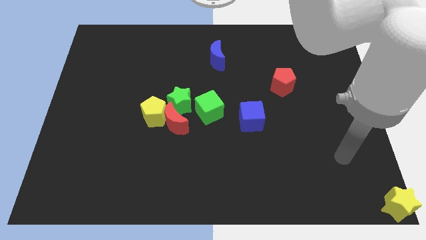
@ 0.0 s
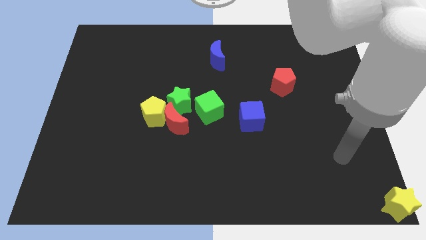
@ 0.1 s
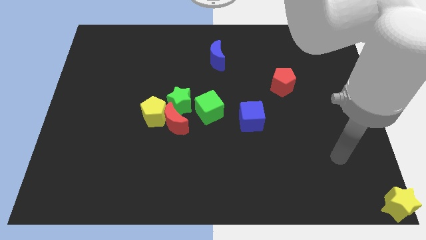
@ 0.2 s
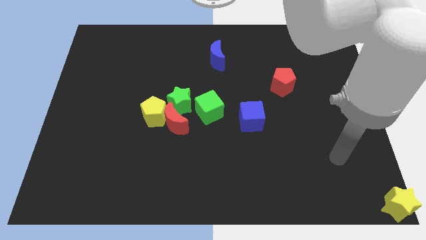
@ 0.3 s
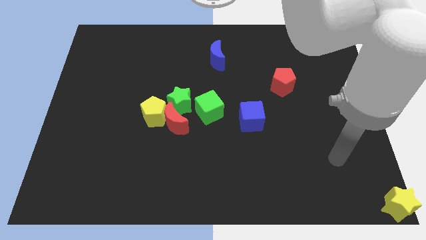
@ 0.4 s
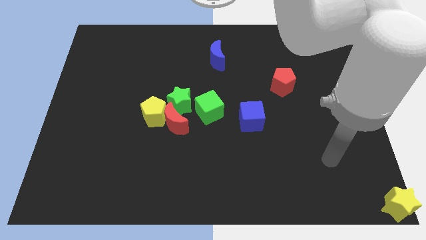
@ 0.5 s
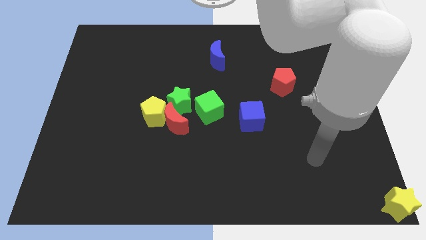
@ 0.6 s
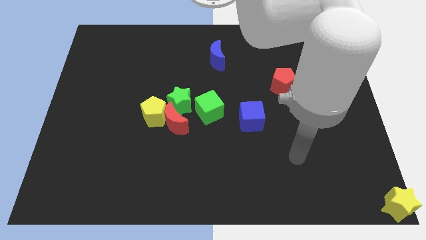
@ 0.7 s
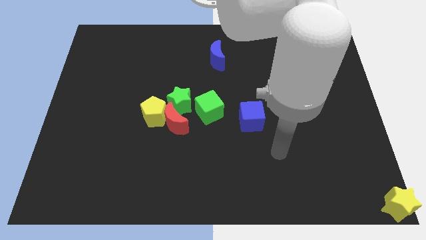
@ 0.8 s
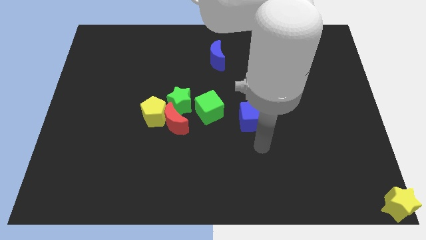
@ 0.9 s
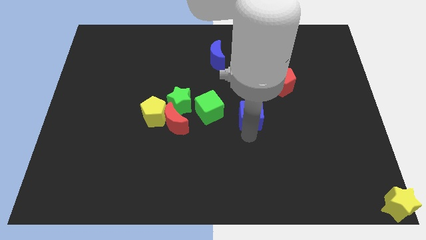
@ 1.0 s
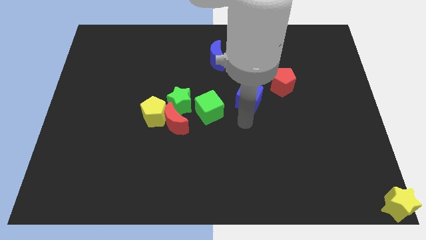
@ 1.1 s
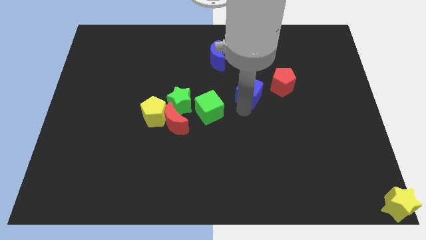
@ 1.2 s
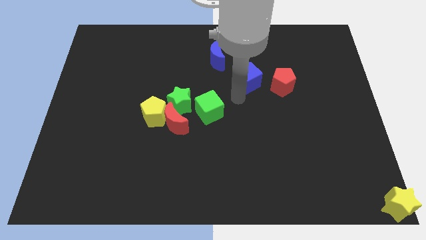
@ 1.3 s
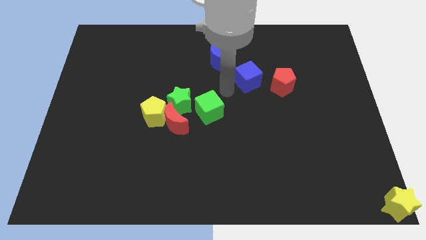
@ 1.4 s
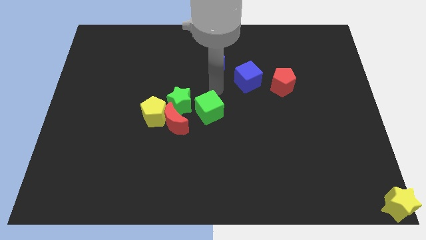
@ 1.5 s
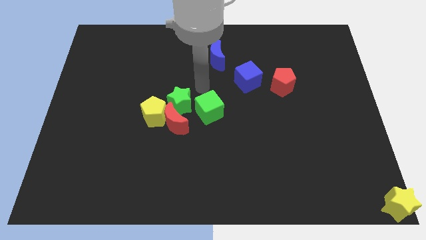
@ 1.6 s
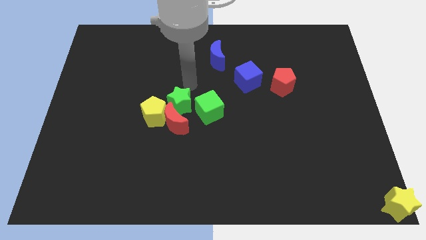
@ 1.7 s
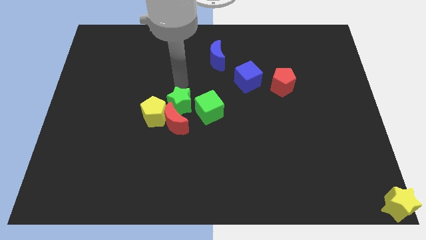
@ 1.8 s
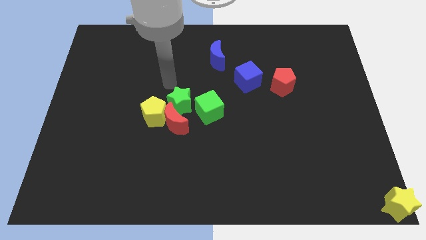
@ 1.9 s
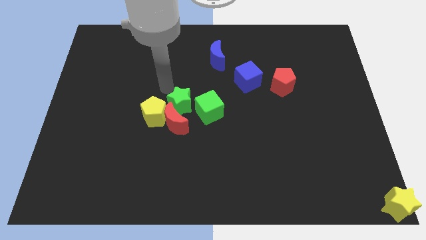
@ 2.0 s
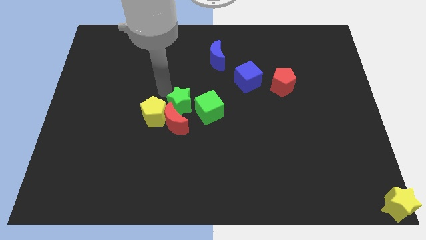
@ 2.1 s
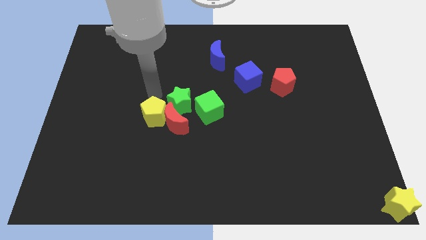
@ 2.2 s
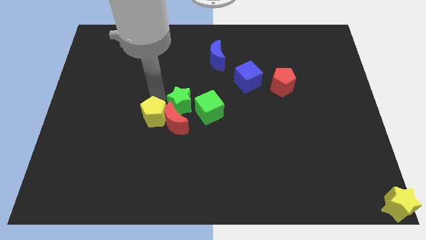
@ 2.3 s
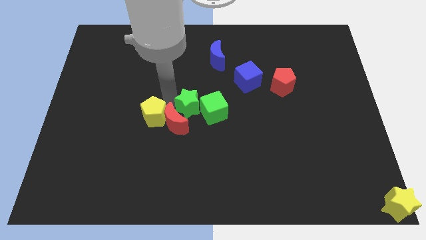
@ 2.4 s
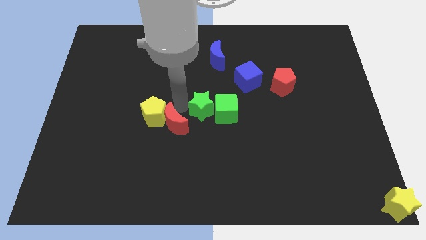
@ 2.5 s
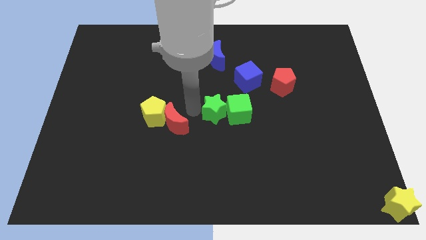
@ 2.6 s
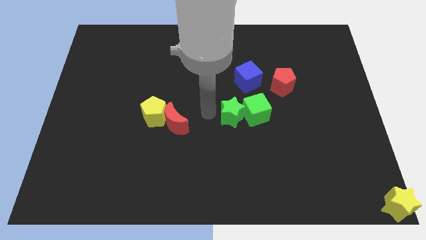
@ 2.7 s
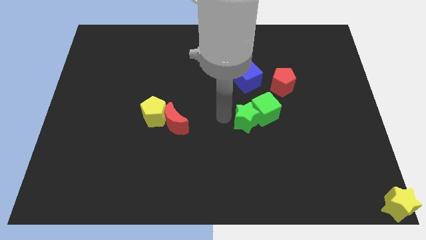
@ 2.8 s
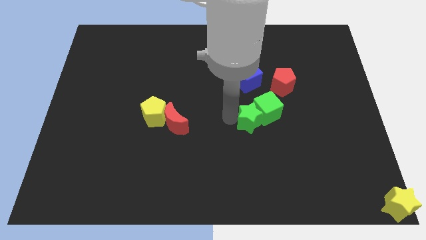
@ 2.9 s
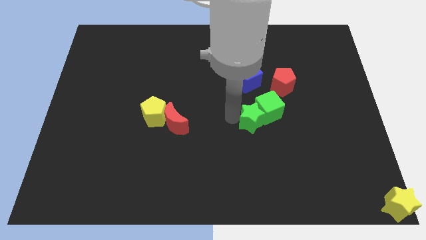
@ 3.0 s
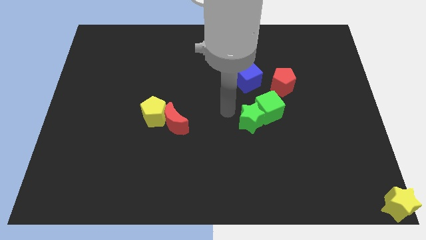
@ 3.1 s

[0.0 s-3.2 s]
push the green star into green cube

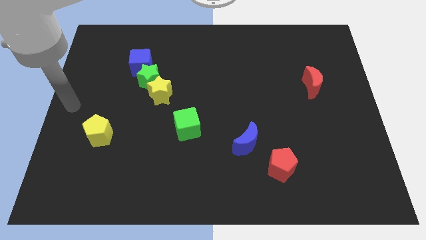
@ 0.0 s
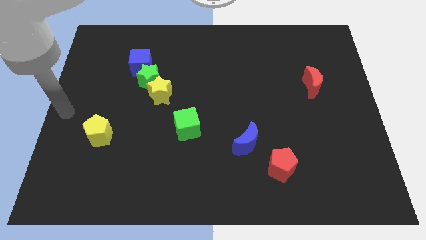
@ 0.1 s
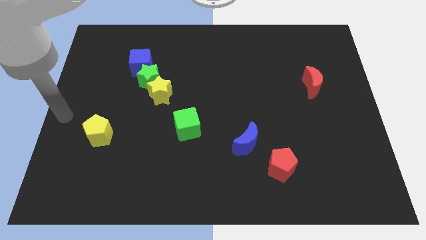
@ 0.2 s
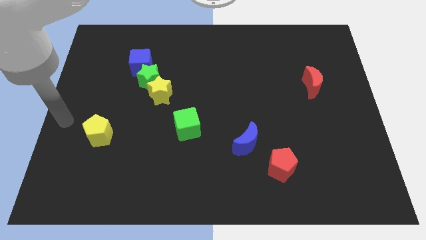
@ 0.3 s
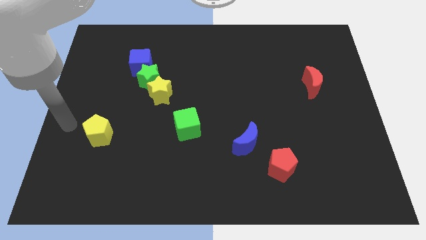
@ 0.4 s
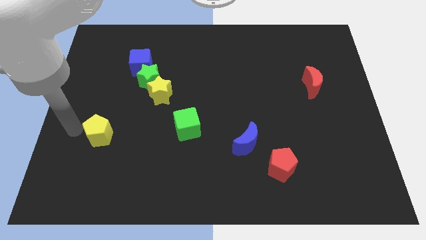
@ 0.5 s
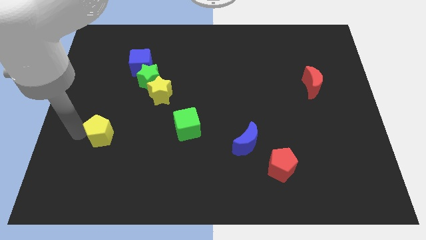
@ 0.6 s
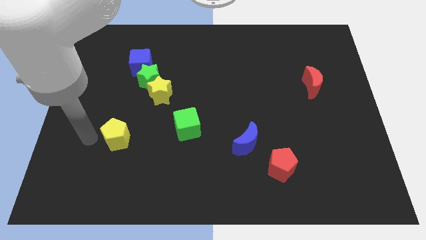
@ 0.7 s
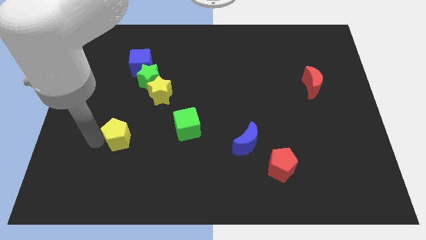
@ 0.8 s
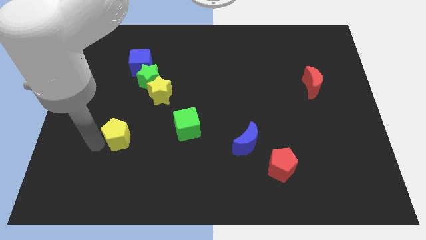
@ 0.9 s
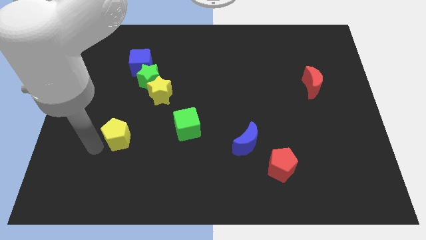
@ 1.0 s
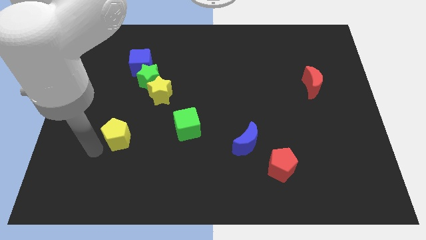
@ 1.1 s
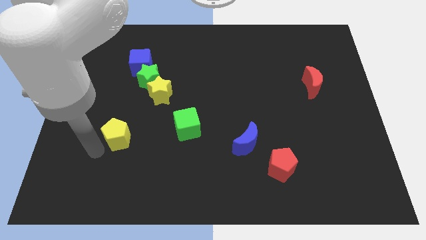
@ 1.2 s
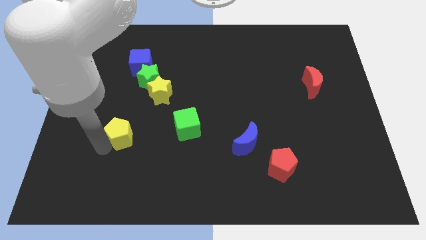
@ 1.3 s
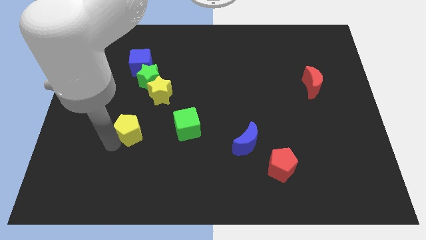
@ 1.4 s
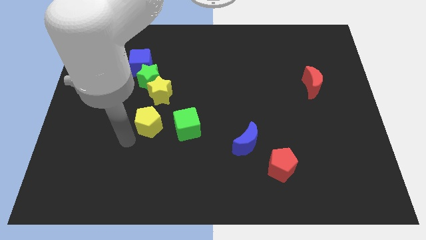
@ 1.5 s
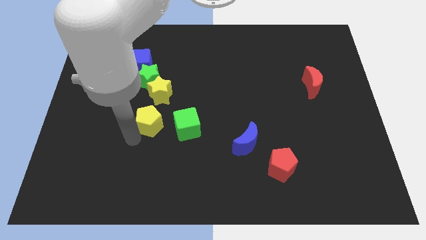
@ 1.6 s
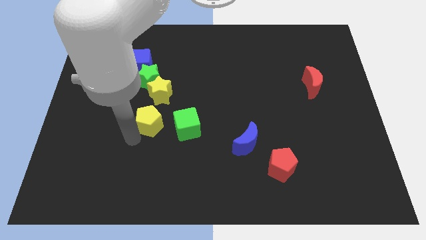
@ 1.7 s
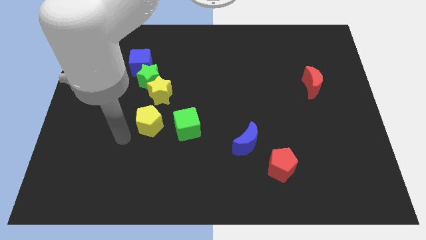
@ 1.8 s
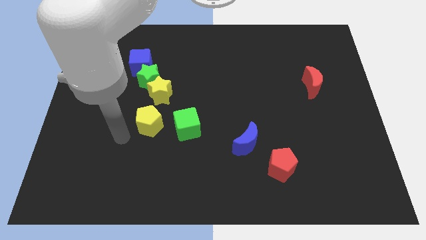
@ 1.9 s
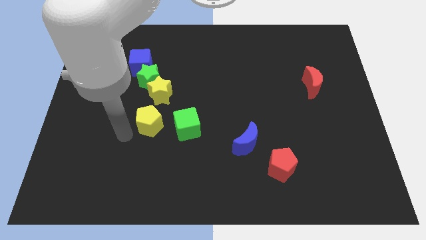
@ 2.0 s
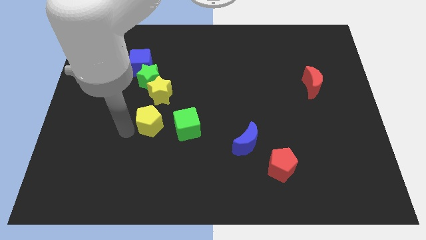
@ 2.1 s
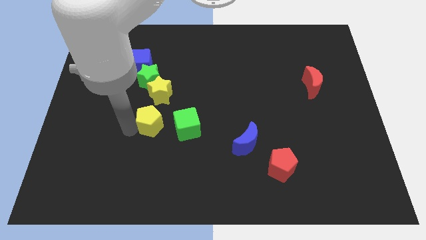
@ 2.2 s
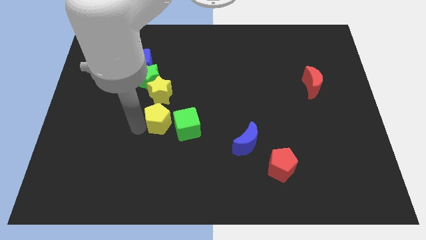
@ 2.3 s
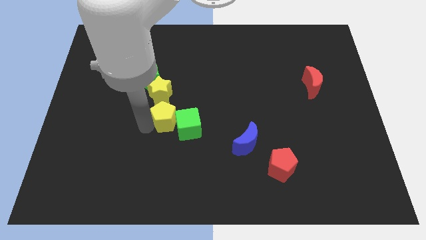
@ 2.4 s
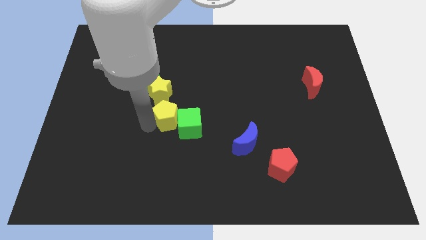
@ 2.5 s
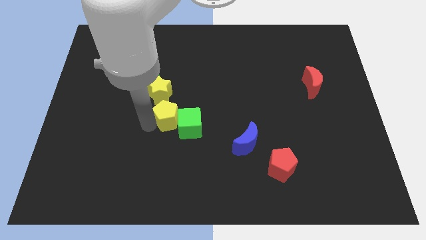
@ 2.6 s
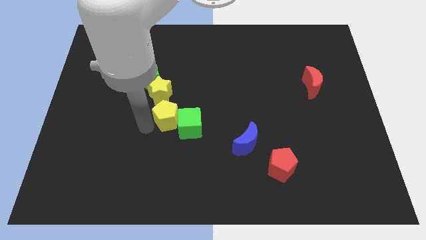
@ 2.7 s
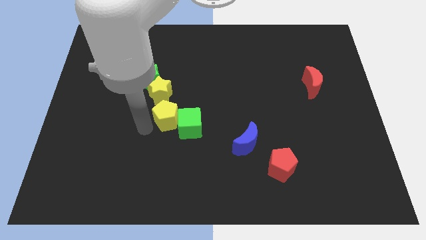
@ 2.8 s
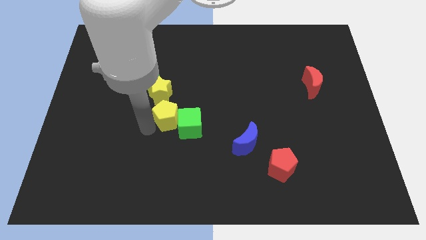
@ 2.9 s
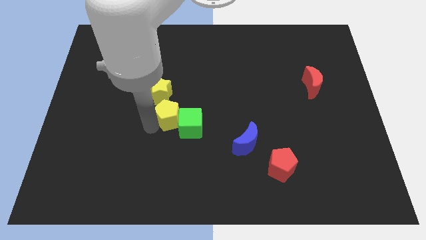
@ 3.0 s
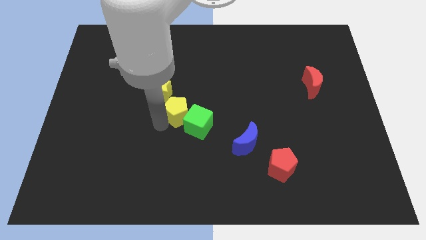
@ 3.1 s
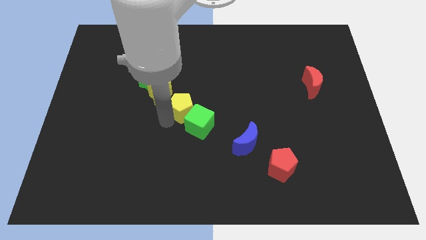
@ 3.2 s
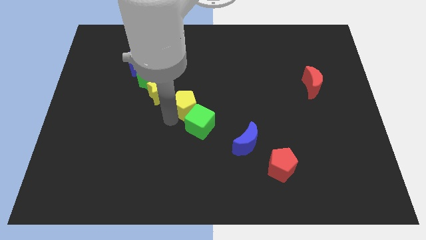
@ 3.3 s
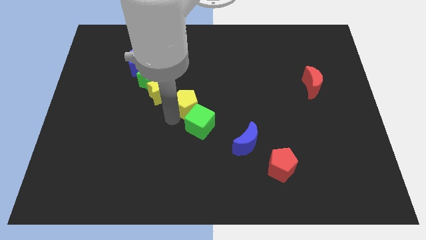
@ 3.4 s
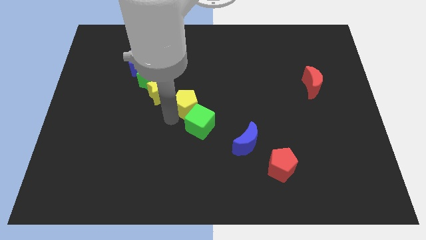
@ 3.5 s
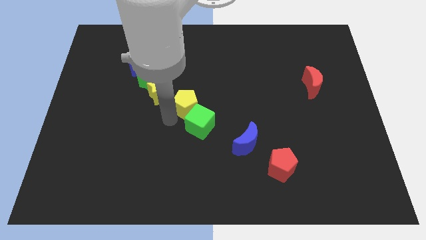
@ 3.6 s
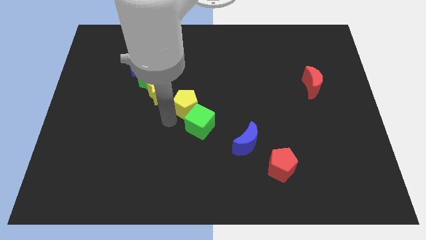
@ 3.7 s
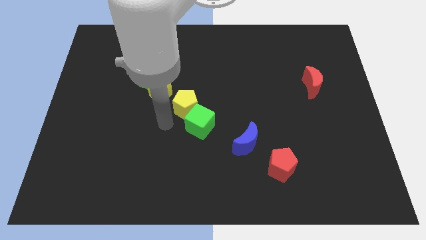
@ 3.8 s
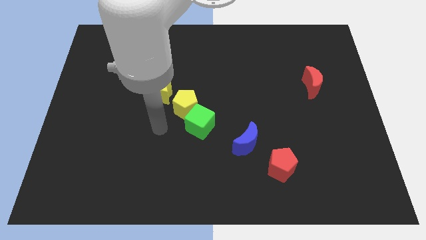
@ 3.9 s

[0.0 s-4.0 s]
push the yellow pentagon at the top left side of the green cube

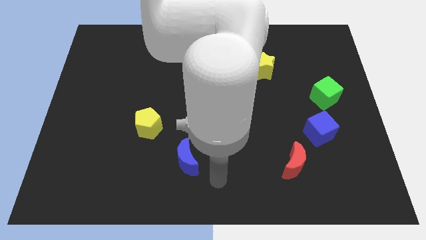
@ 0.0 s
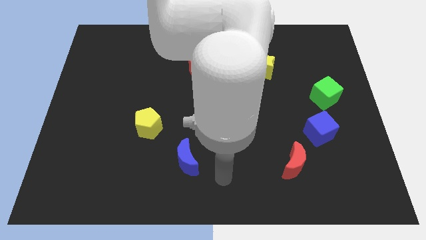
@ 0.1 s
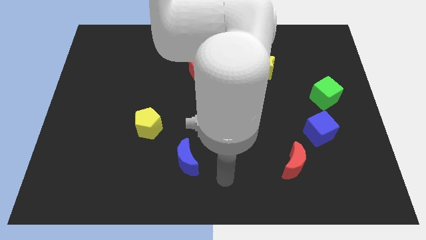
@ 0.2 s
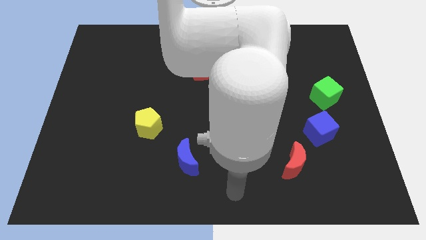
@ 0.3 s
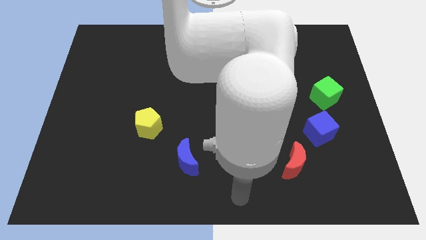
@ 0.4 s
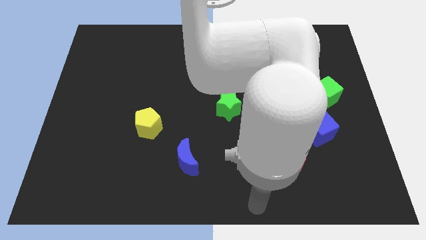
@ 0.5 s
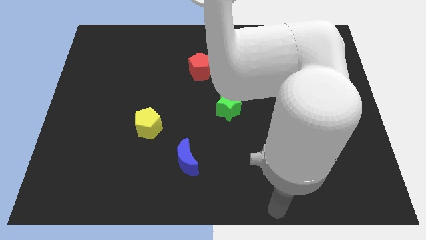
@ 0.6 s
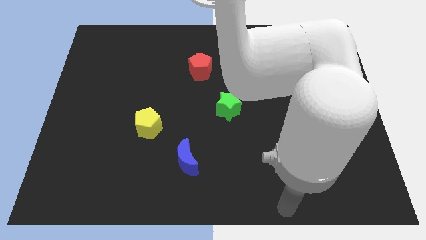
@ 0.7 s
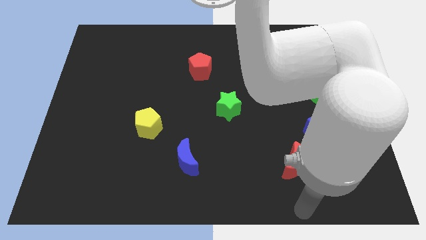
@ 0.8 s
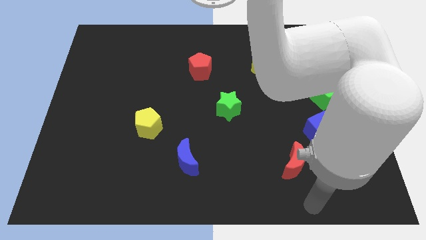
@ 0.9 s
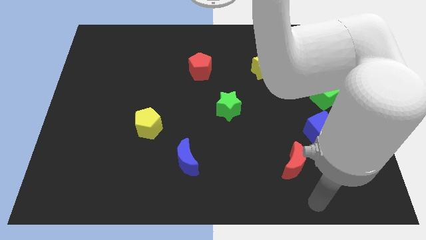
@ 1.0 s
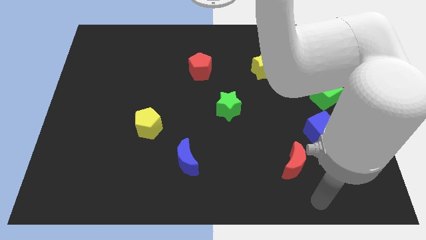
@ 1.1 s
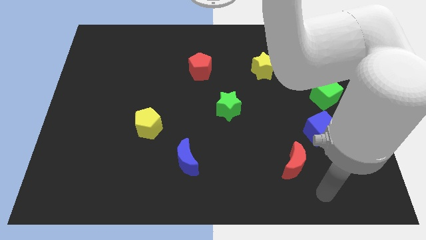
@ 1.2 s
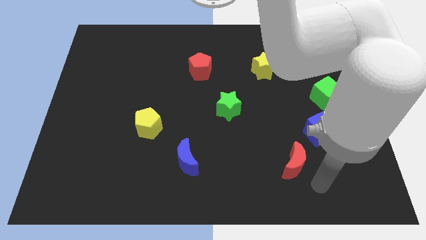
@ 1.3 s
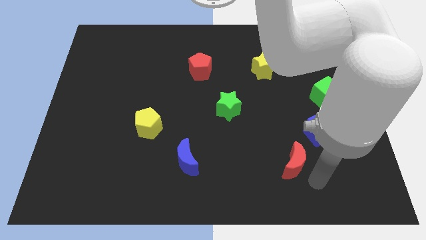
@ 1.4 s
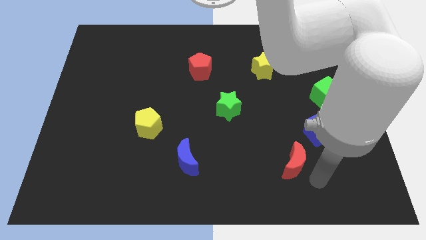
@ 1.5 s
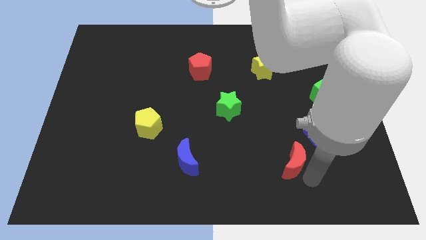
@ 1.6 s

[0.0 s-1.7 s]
move your hand close to the right side of the red crescent
